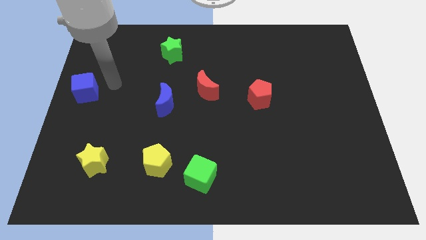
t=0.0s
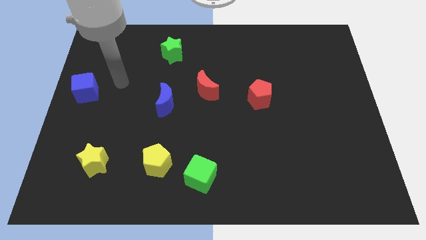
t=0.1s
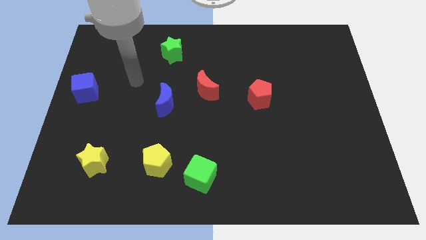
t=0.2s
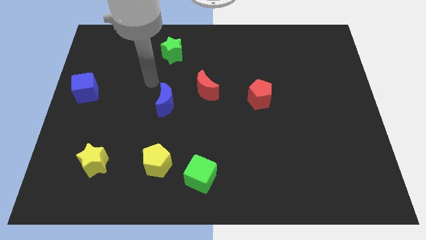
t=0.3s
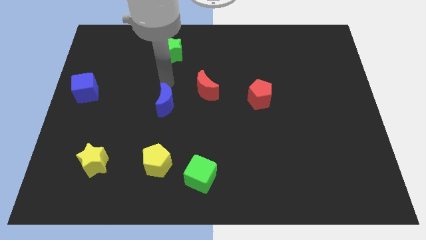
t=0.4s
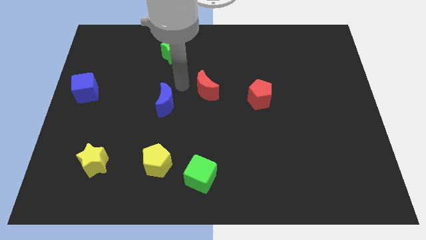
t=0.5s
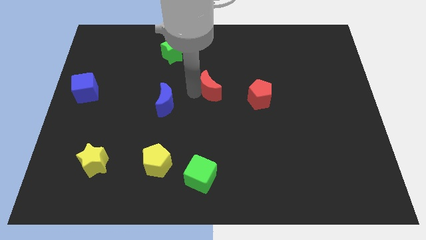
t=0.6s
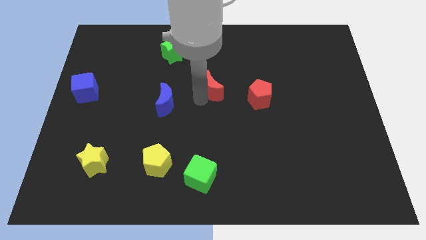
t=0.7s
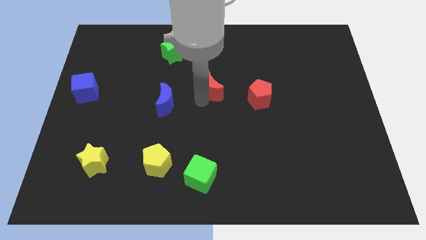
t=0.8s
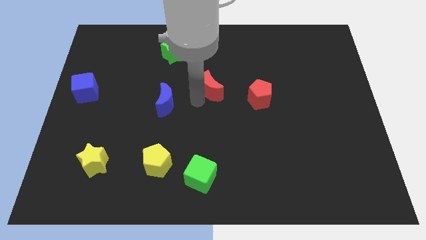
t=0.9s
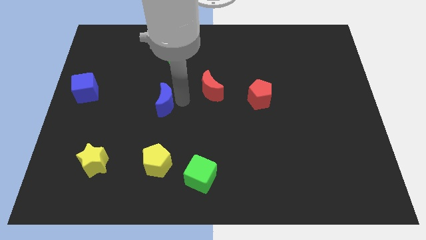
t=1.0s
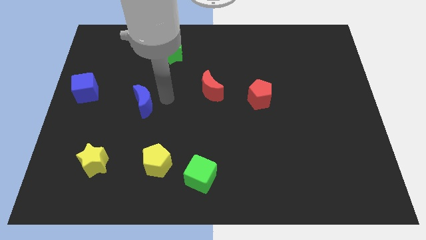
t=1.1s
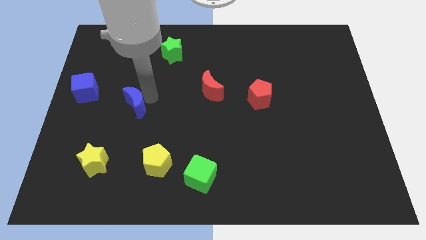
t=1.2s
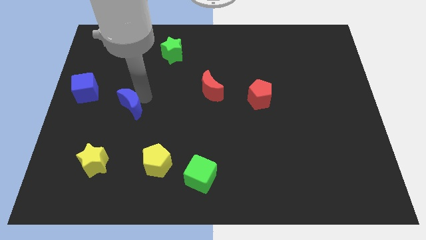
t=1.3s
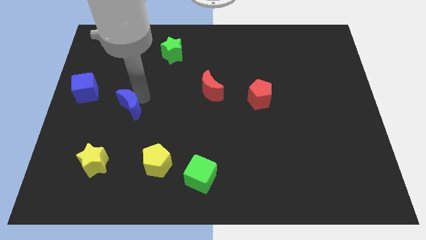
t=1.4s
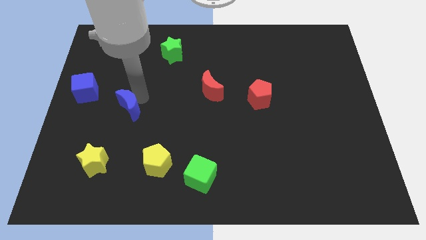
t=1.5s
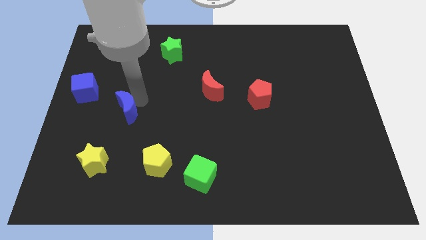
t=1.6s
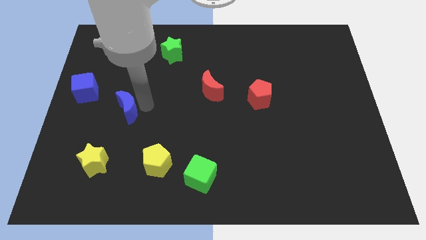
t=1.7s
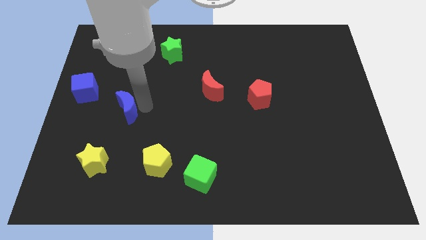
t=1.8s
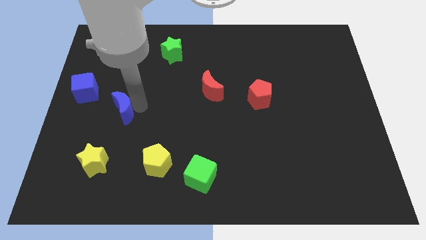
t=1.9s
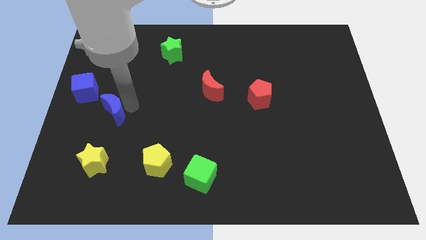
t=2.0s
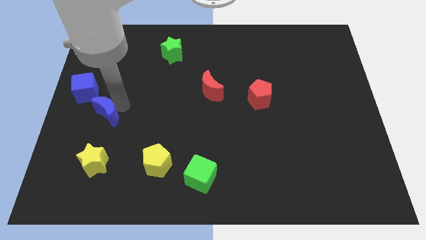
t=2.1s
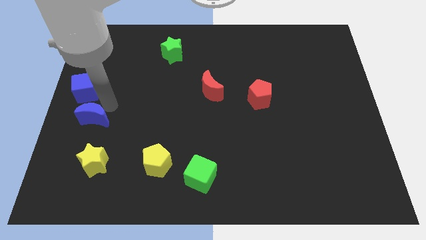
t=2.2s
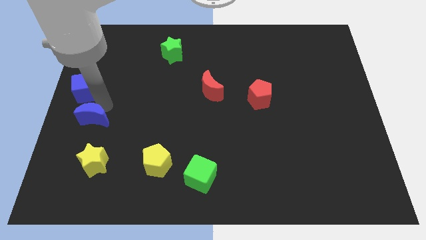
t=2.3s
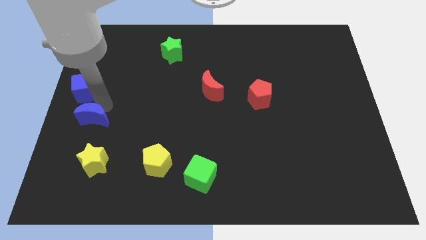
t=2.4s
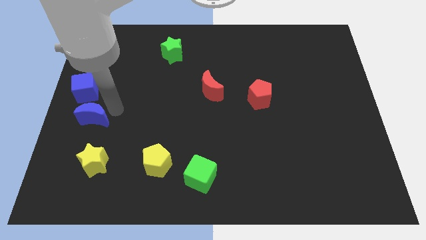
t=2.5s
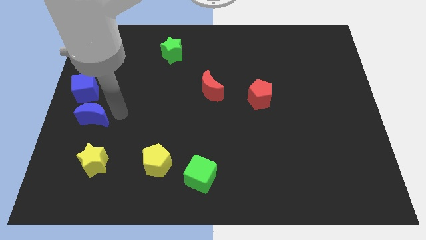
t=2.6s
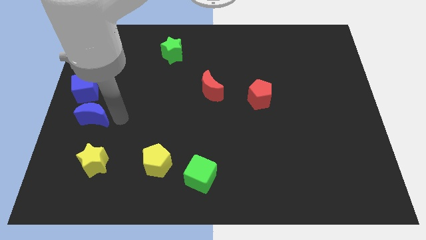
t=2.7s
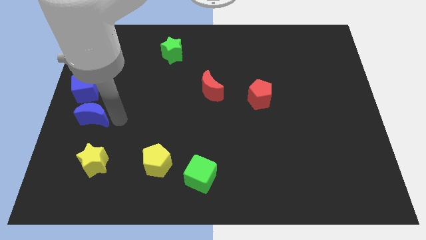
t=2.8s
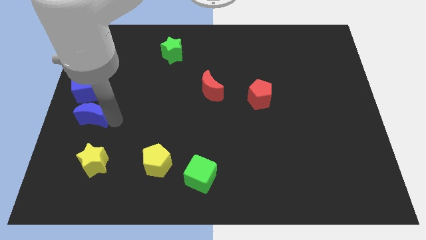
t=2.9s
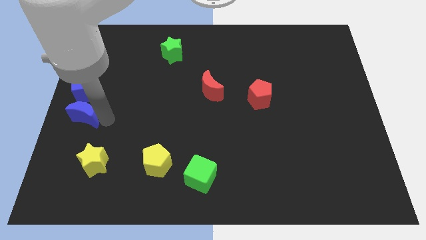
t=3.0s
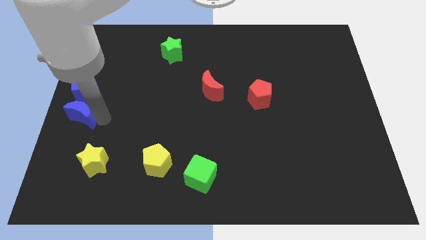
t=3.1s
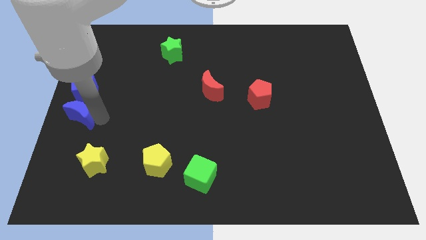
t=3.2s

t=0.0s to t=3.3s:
place blue moon to the bottom of blue cube

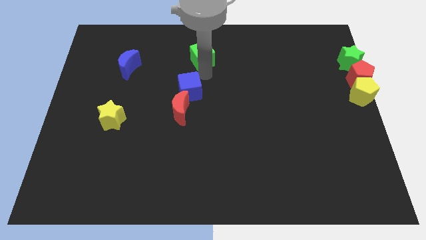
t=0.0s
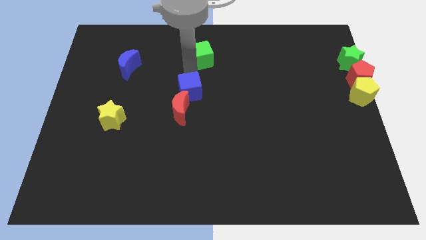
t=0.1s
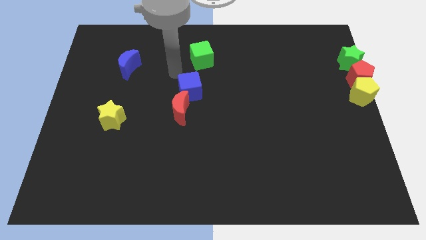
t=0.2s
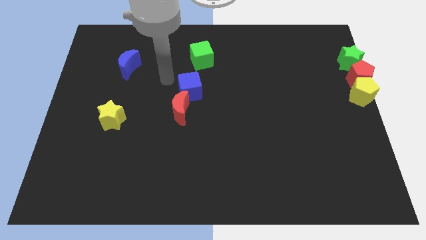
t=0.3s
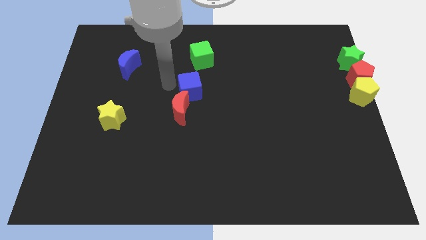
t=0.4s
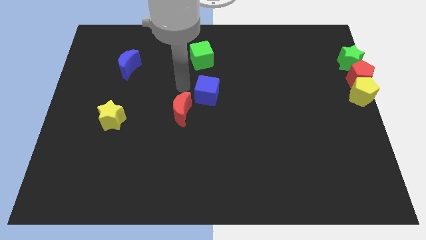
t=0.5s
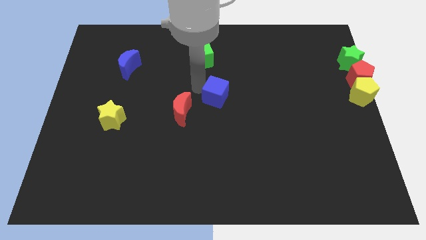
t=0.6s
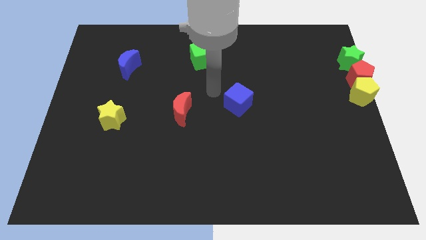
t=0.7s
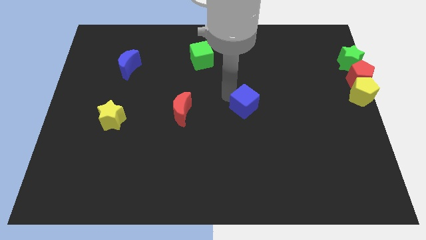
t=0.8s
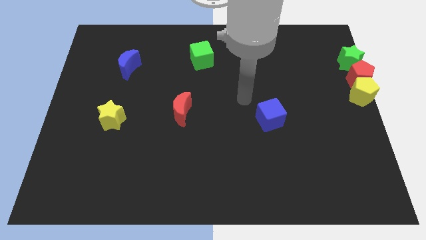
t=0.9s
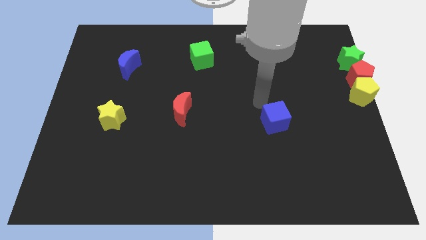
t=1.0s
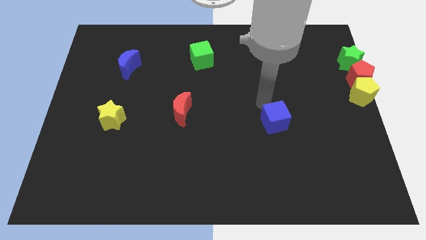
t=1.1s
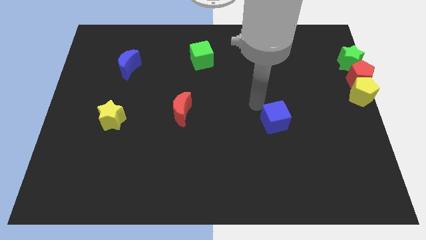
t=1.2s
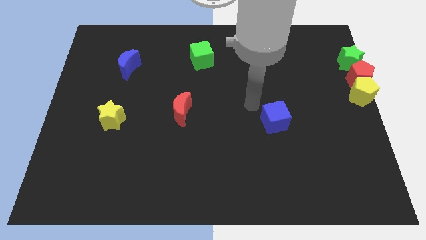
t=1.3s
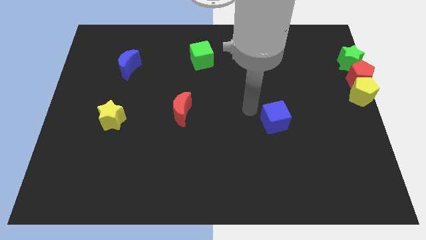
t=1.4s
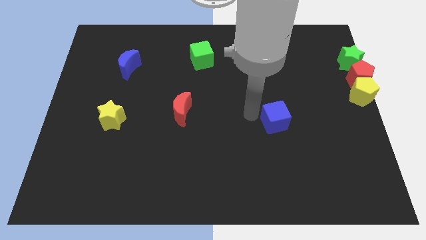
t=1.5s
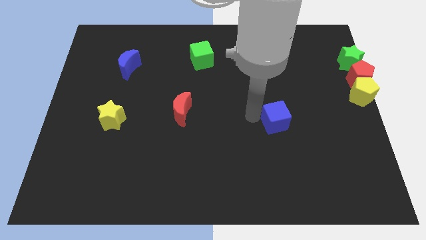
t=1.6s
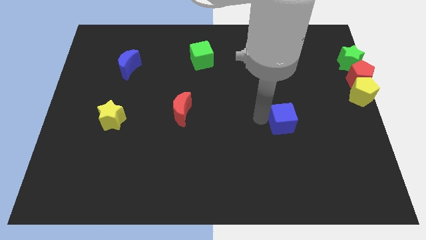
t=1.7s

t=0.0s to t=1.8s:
move the blue cube diagonally to the green cube

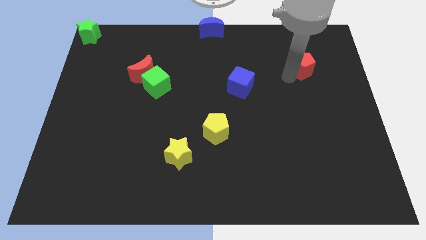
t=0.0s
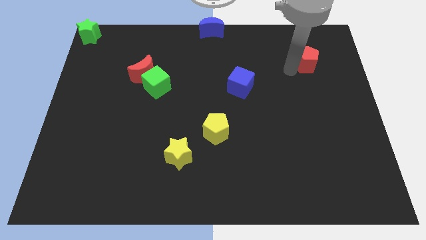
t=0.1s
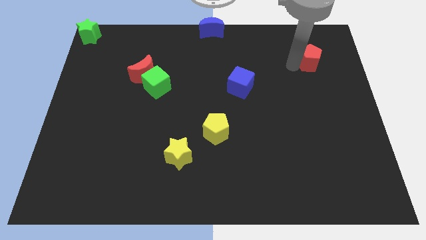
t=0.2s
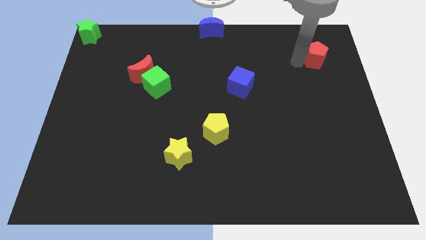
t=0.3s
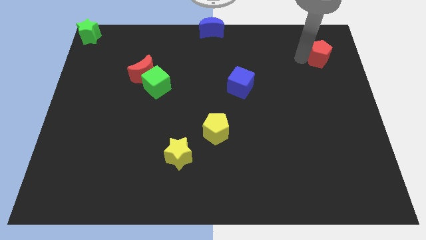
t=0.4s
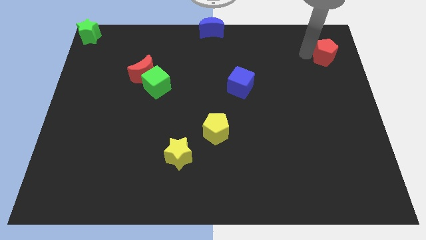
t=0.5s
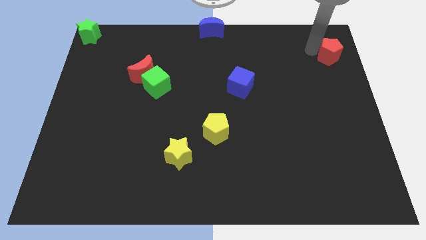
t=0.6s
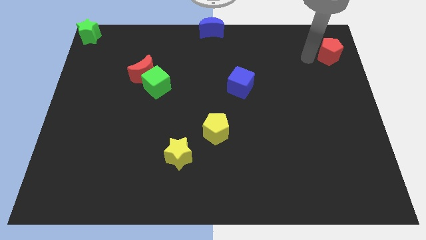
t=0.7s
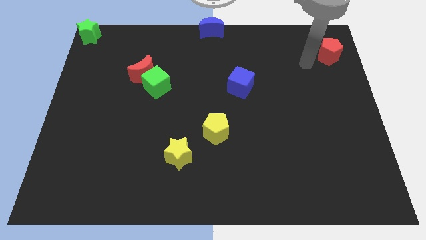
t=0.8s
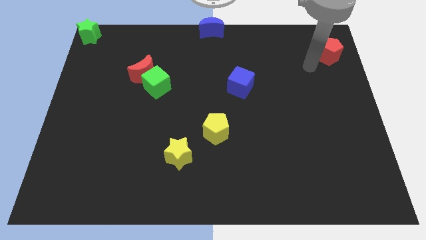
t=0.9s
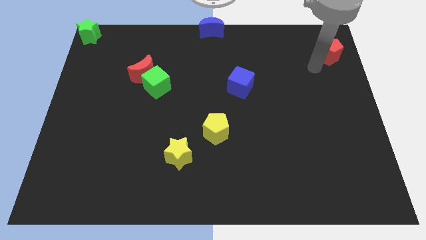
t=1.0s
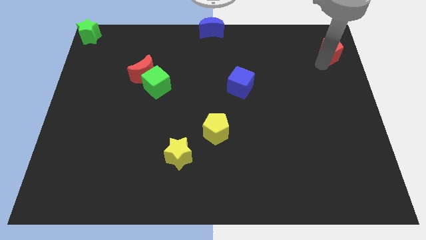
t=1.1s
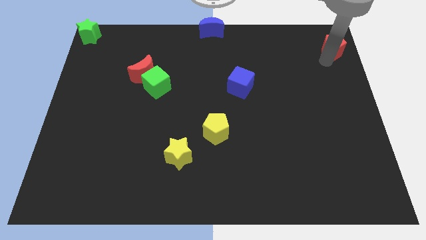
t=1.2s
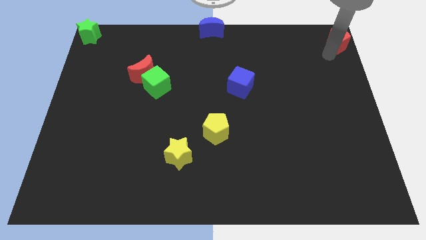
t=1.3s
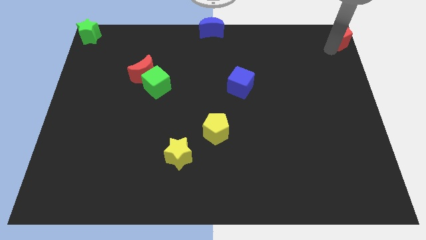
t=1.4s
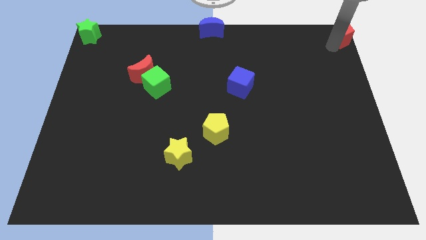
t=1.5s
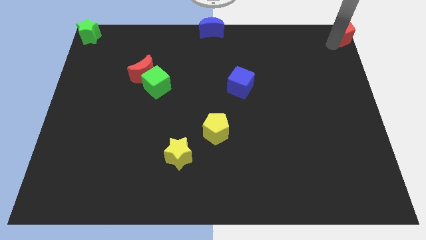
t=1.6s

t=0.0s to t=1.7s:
drag the red pentagon to the top right of the table

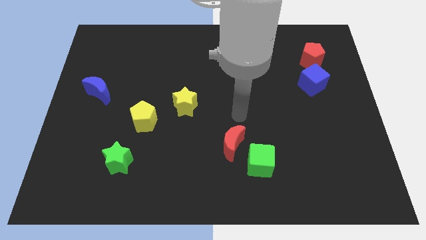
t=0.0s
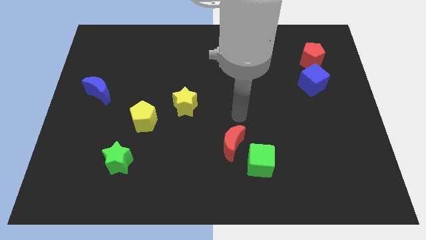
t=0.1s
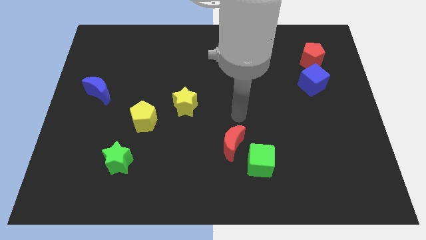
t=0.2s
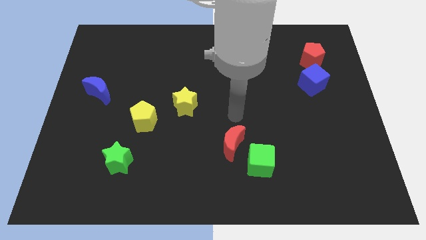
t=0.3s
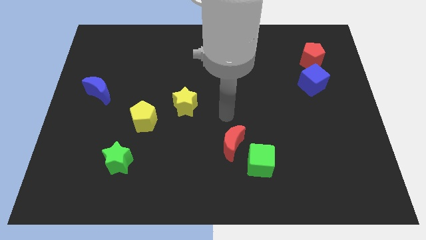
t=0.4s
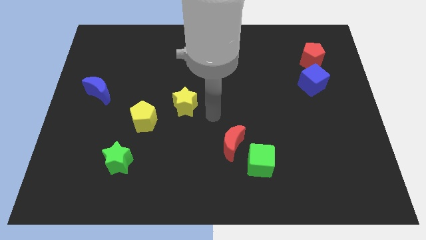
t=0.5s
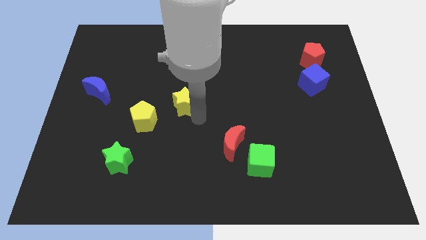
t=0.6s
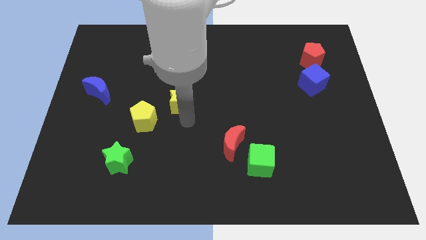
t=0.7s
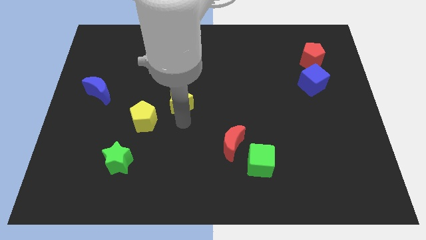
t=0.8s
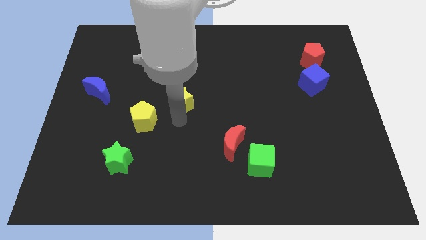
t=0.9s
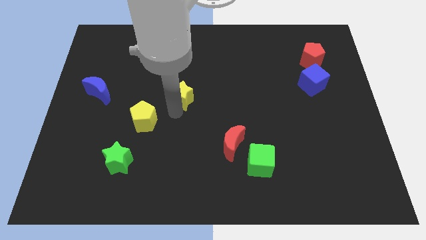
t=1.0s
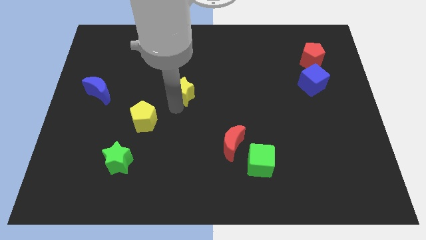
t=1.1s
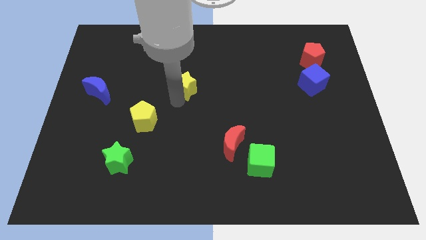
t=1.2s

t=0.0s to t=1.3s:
move your arm close to the yellow star

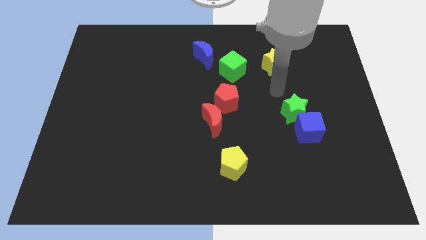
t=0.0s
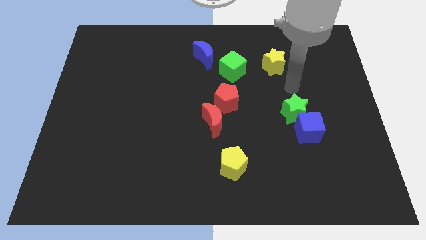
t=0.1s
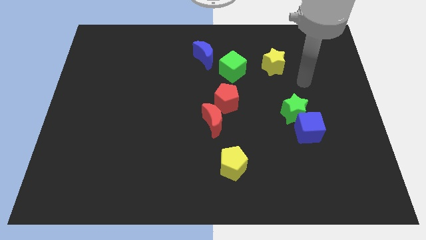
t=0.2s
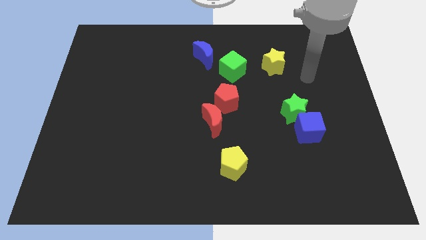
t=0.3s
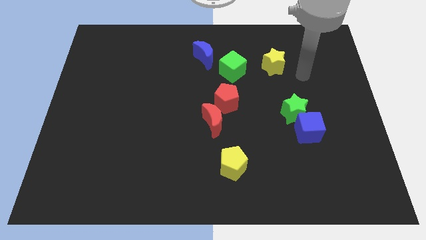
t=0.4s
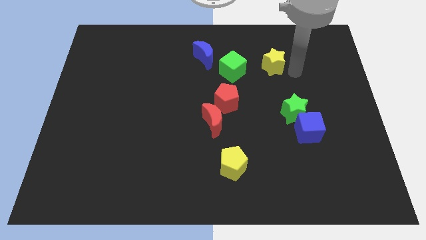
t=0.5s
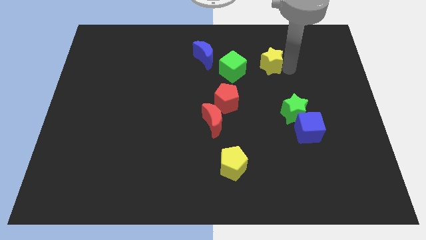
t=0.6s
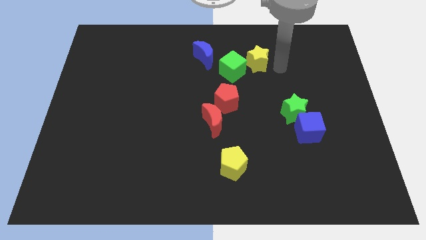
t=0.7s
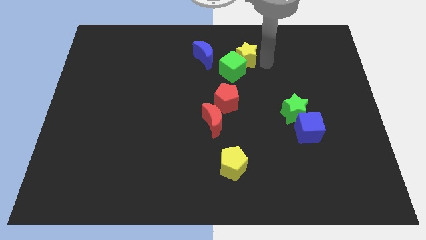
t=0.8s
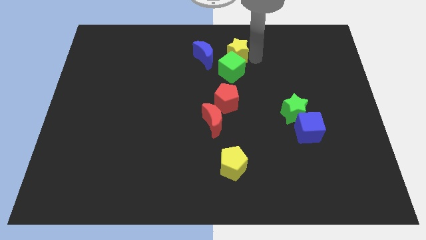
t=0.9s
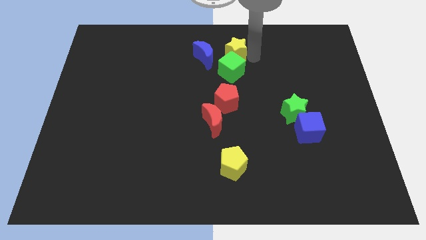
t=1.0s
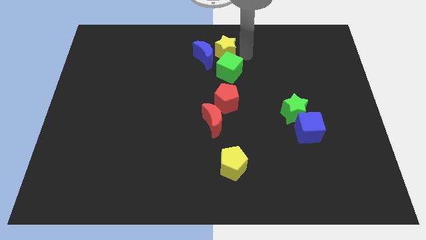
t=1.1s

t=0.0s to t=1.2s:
push the yellow star into the green cube
